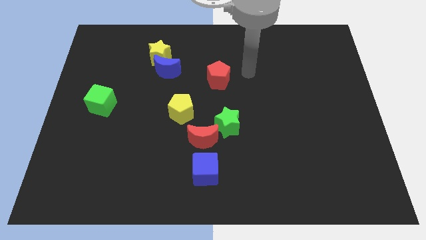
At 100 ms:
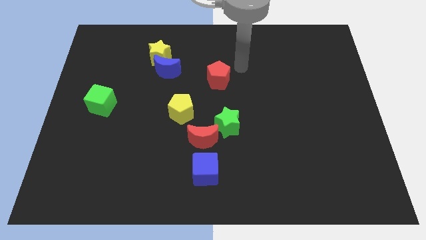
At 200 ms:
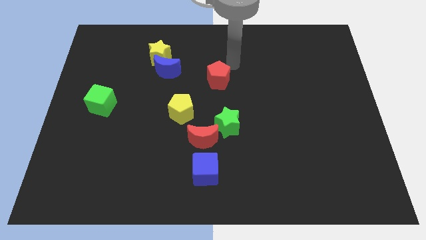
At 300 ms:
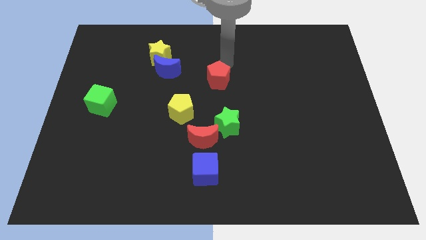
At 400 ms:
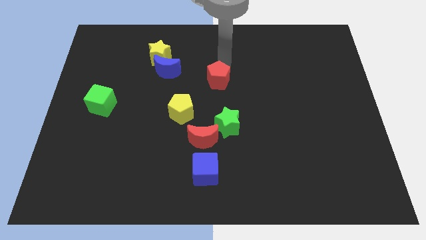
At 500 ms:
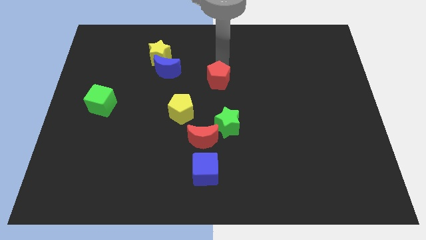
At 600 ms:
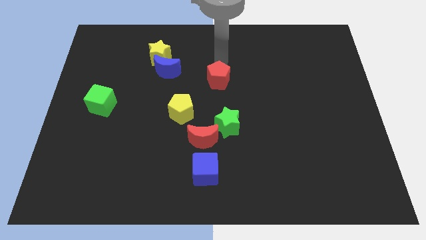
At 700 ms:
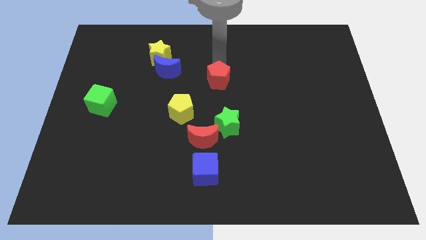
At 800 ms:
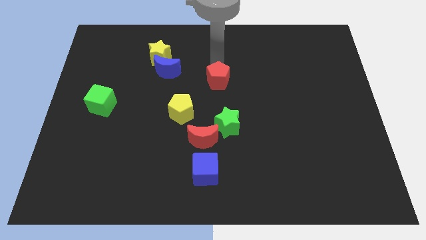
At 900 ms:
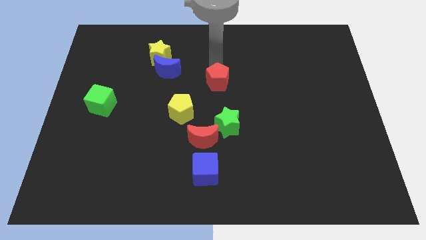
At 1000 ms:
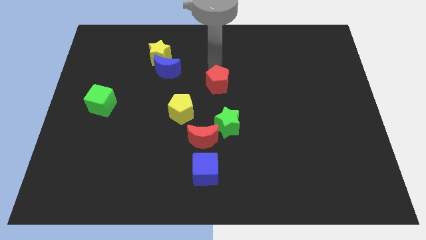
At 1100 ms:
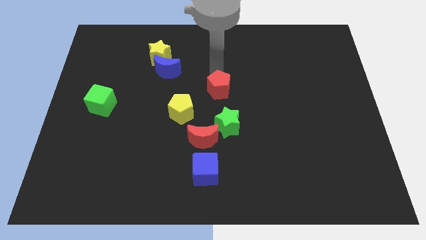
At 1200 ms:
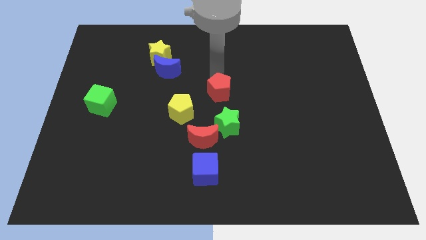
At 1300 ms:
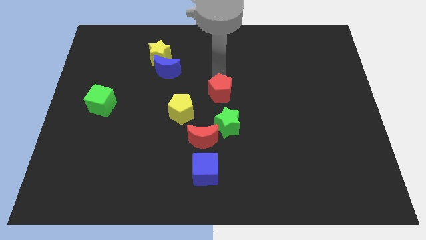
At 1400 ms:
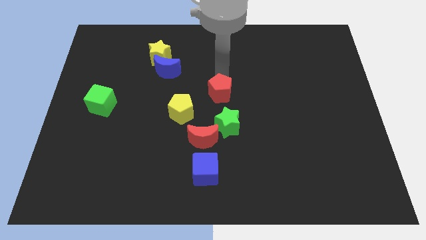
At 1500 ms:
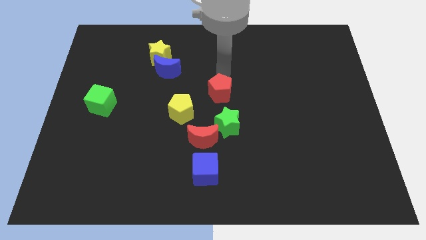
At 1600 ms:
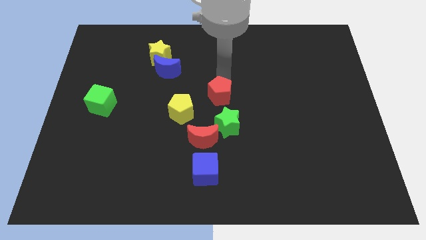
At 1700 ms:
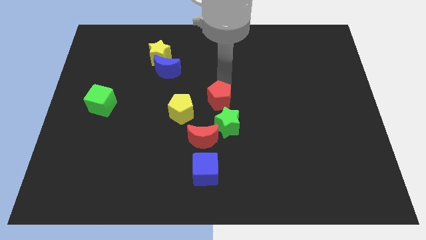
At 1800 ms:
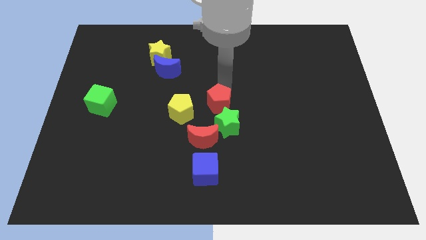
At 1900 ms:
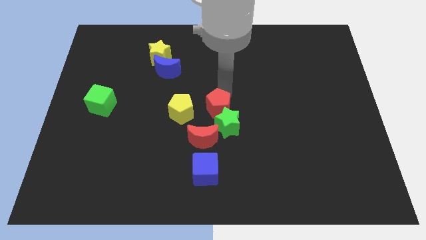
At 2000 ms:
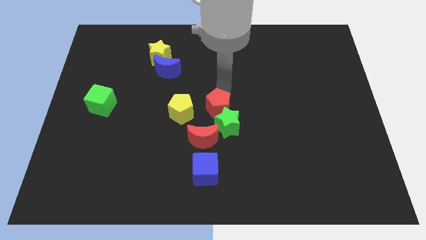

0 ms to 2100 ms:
push the red pentagon on top of green star

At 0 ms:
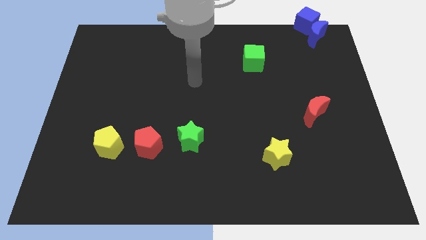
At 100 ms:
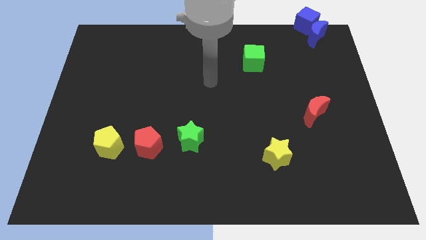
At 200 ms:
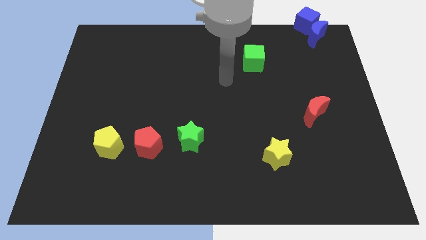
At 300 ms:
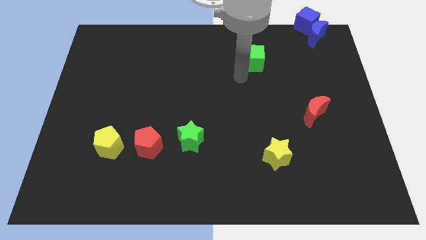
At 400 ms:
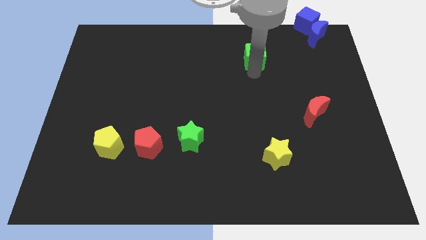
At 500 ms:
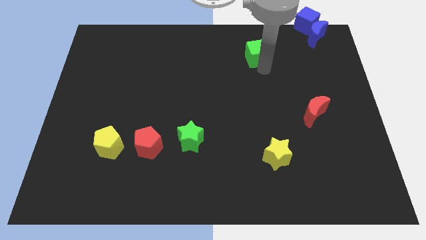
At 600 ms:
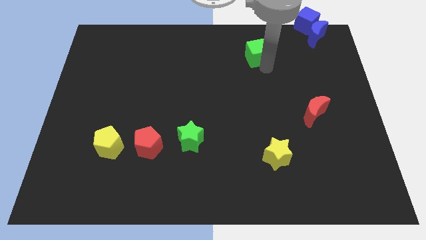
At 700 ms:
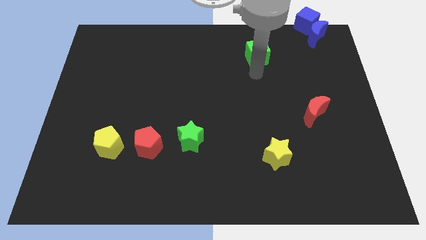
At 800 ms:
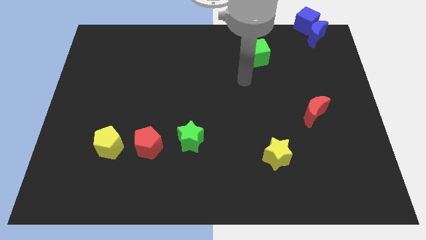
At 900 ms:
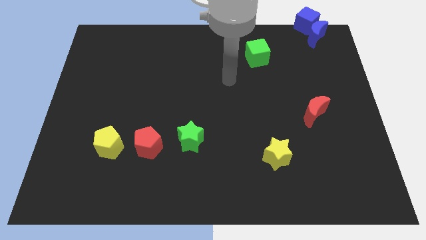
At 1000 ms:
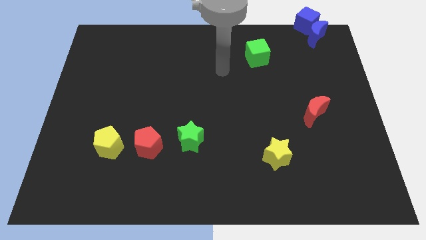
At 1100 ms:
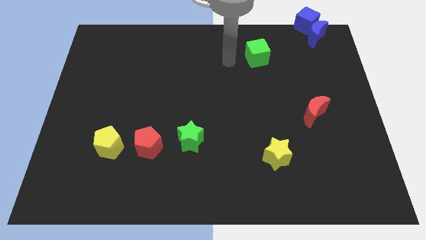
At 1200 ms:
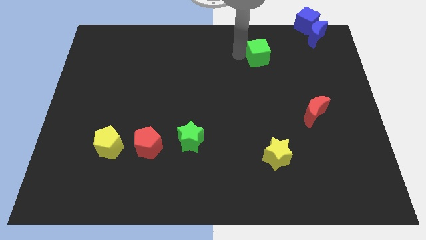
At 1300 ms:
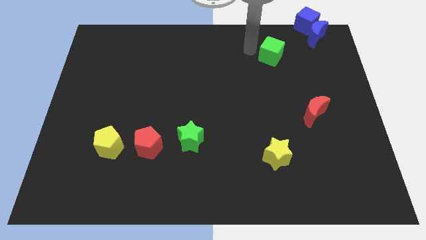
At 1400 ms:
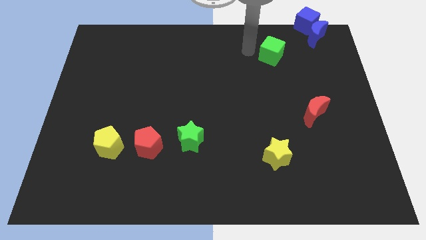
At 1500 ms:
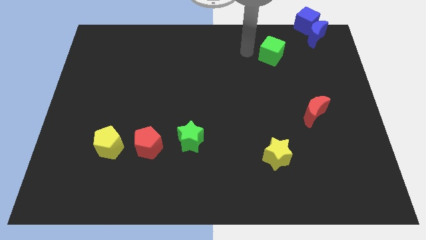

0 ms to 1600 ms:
push the green cube slightly to the right

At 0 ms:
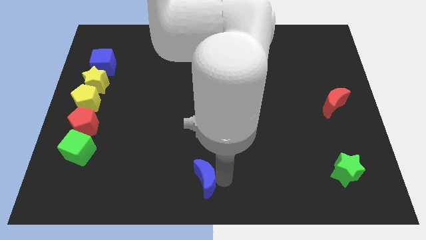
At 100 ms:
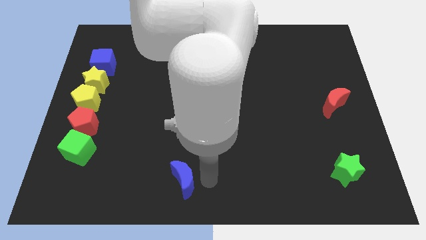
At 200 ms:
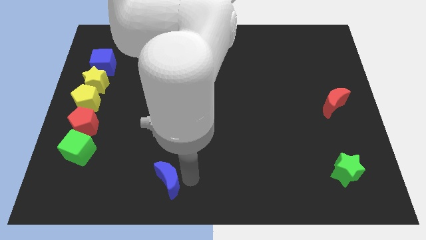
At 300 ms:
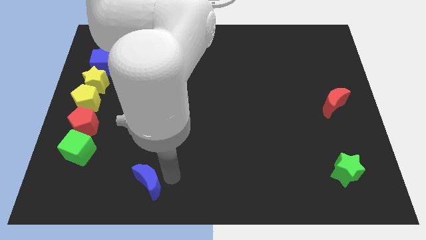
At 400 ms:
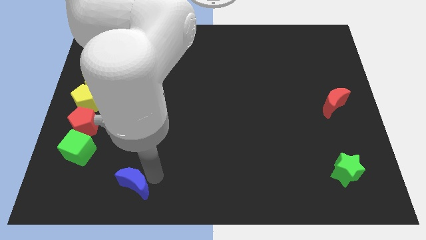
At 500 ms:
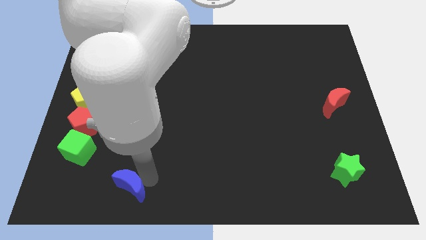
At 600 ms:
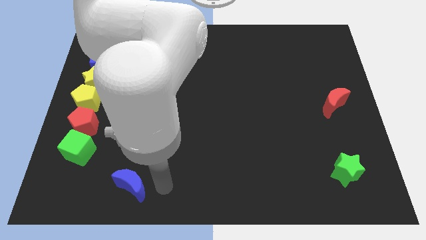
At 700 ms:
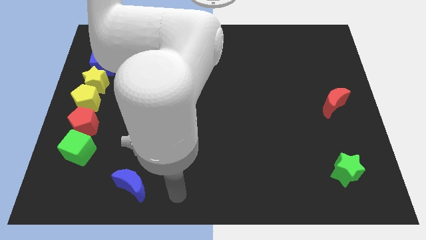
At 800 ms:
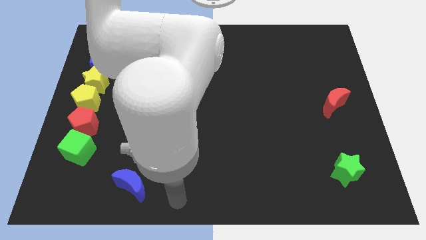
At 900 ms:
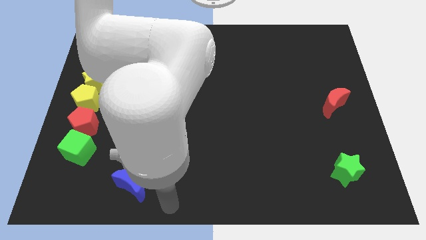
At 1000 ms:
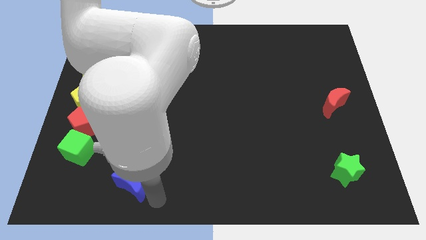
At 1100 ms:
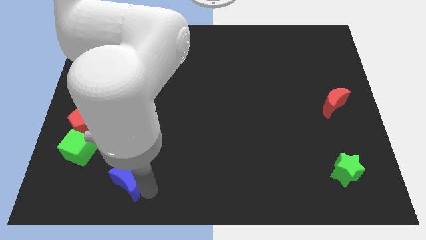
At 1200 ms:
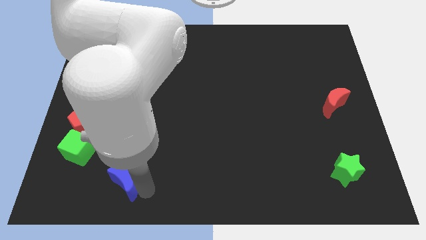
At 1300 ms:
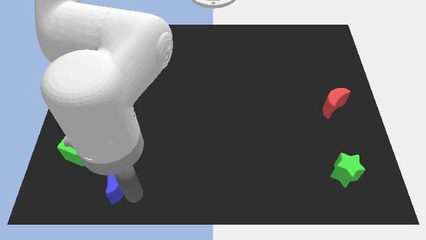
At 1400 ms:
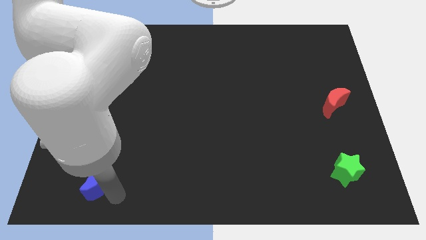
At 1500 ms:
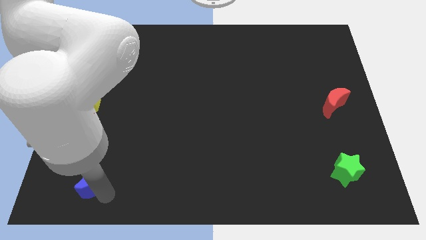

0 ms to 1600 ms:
push blue moon to the left

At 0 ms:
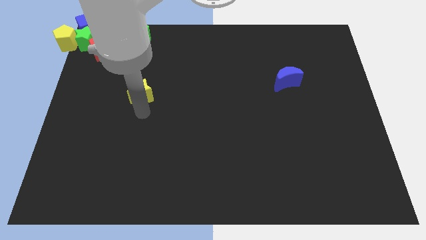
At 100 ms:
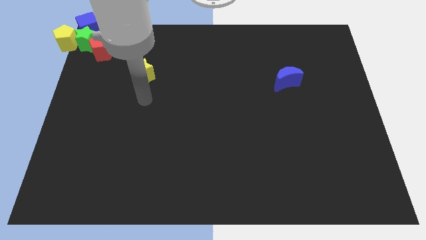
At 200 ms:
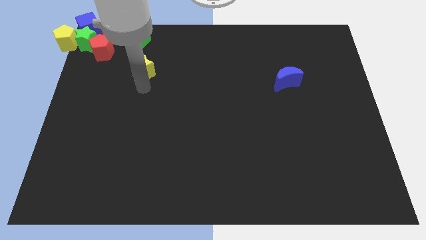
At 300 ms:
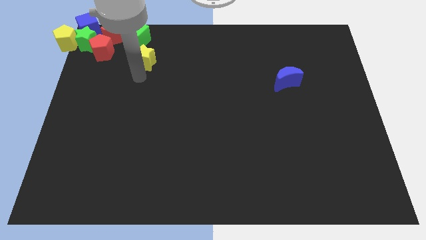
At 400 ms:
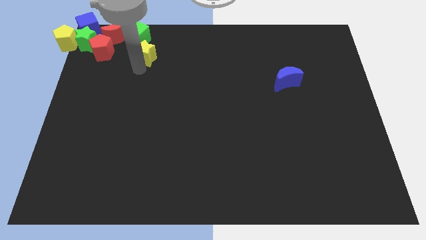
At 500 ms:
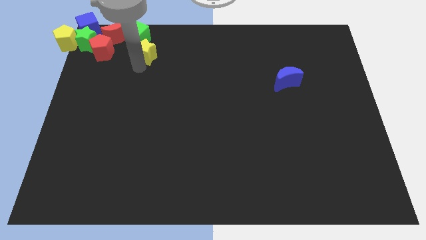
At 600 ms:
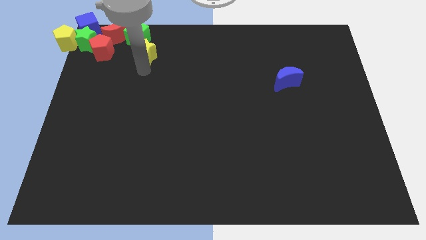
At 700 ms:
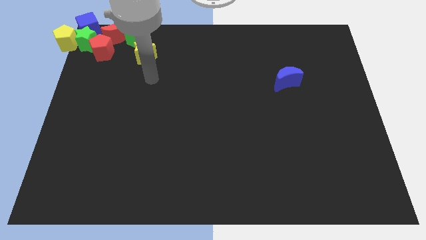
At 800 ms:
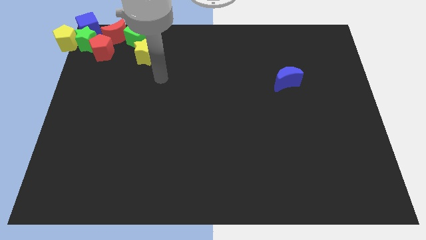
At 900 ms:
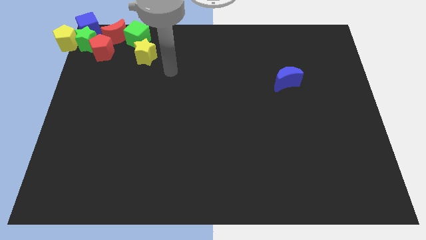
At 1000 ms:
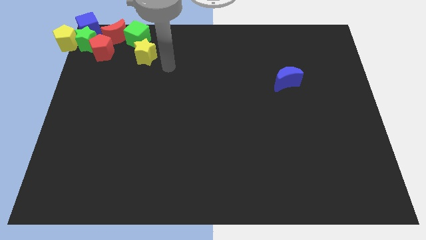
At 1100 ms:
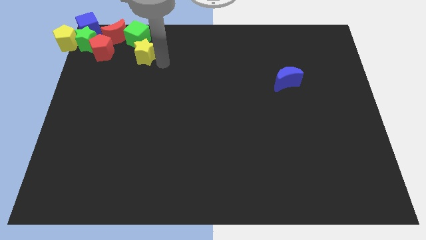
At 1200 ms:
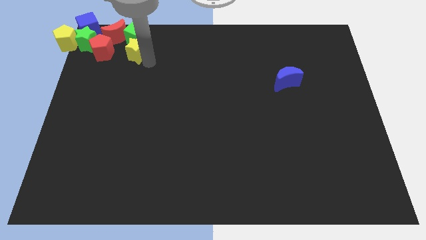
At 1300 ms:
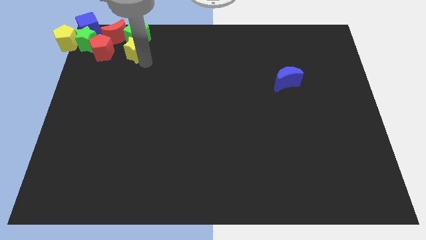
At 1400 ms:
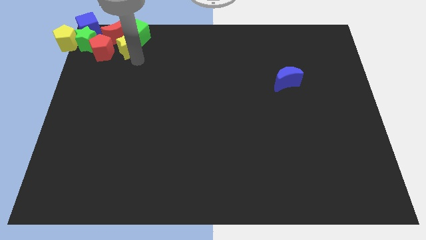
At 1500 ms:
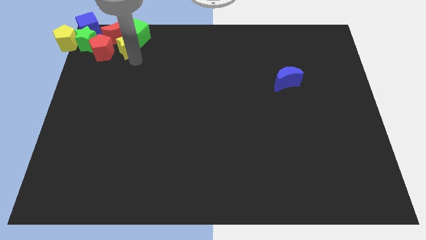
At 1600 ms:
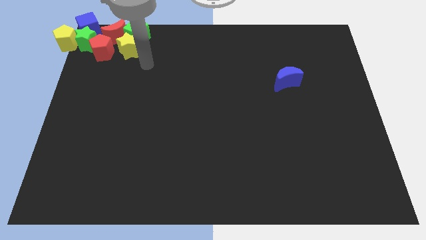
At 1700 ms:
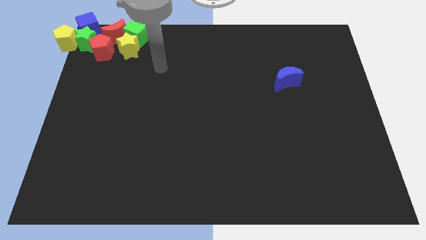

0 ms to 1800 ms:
move the yellow star to the right of the red pentagon

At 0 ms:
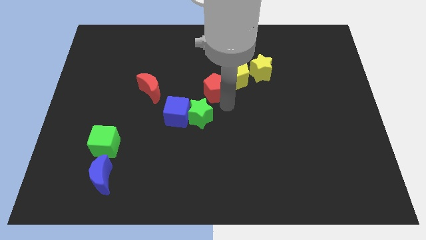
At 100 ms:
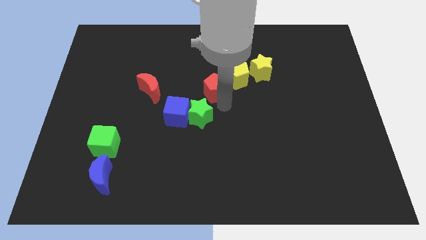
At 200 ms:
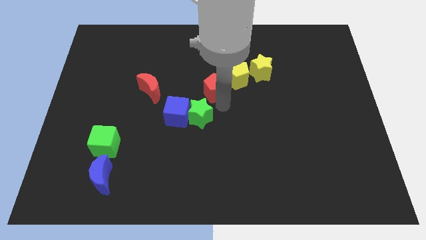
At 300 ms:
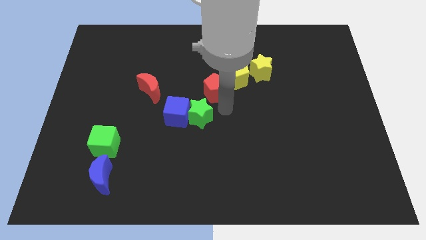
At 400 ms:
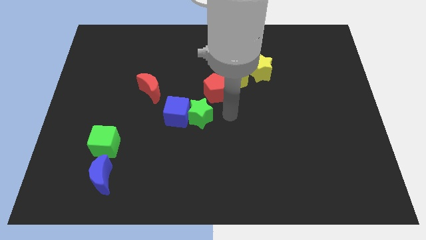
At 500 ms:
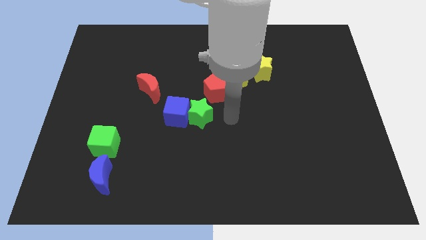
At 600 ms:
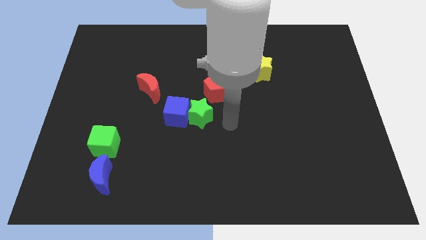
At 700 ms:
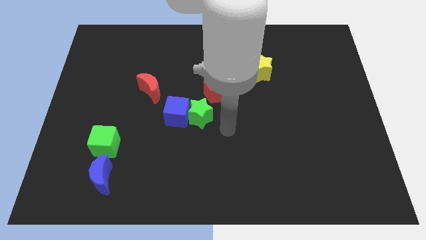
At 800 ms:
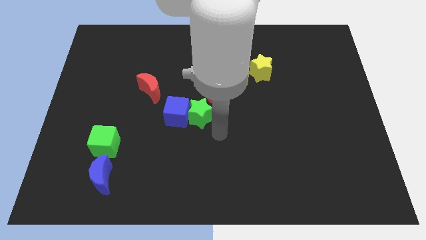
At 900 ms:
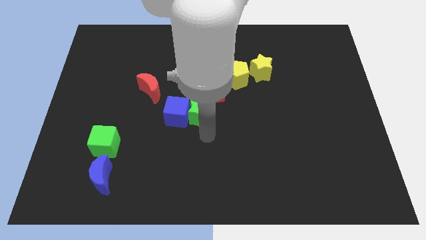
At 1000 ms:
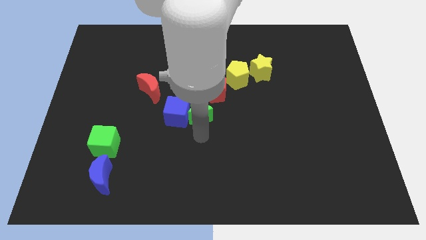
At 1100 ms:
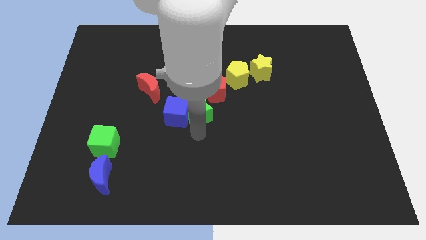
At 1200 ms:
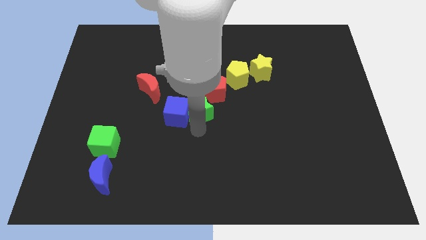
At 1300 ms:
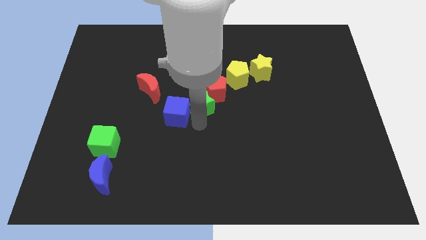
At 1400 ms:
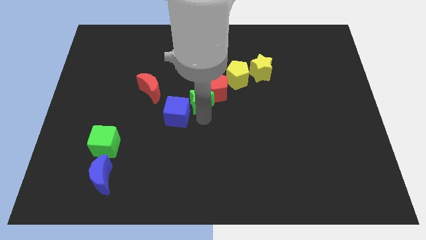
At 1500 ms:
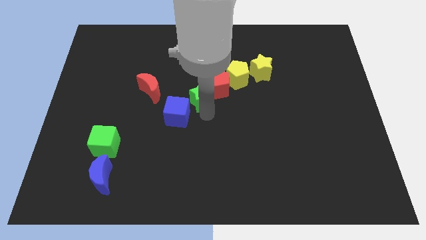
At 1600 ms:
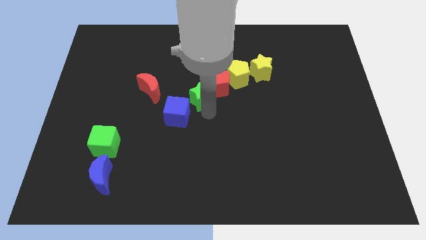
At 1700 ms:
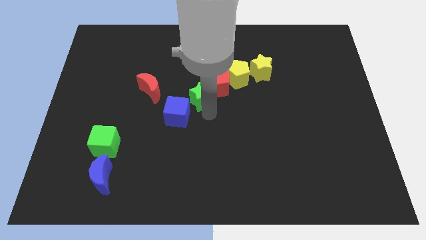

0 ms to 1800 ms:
push the green star into the red pentagon
